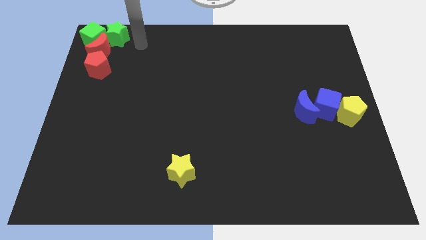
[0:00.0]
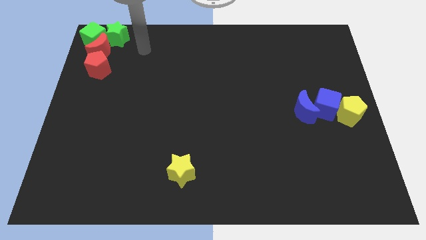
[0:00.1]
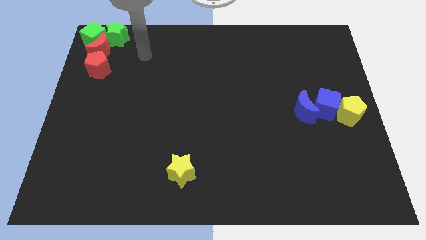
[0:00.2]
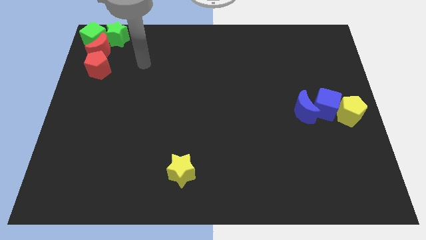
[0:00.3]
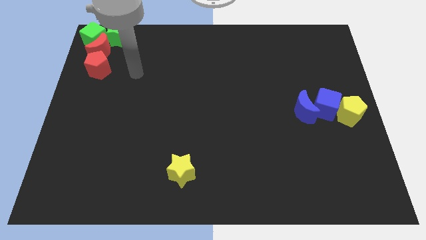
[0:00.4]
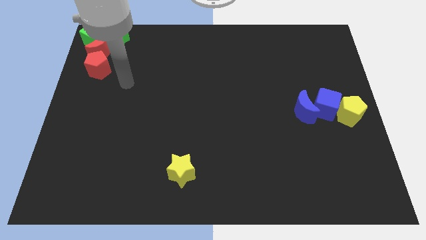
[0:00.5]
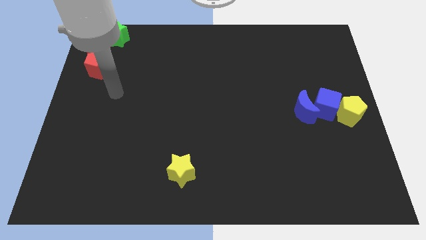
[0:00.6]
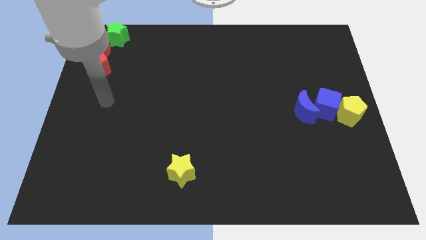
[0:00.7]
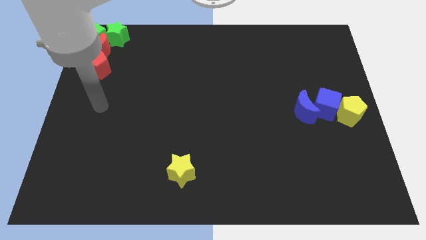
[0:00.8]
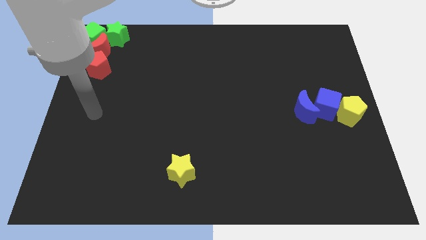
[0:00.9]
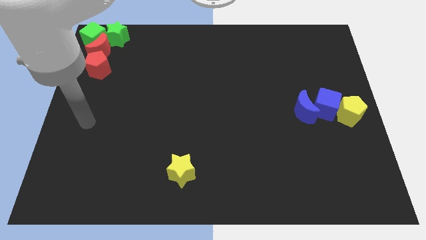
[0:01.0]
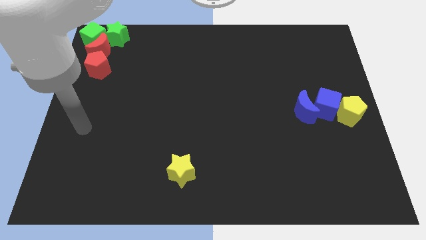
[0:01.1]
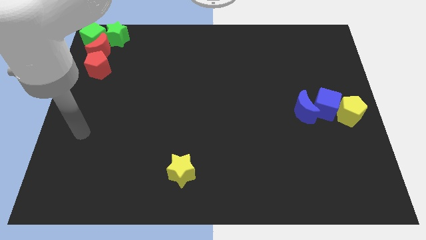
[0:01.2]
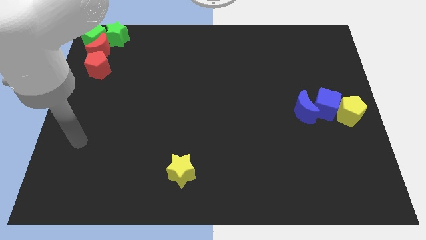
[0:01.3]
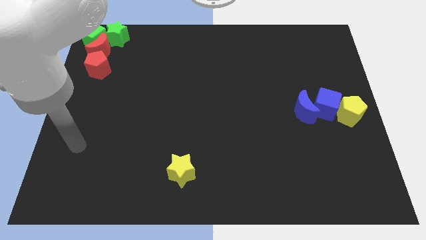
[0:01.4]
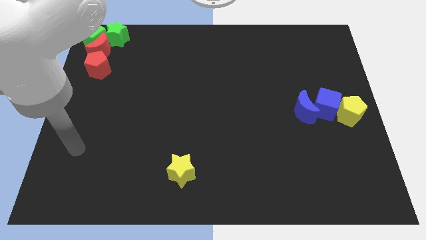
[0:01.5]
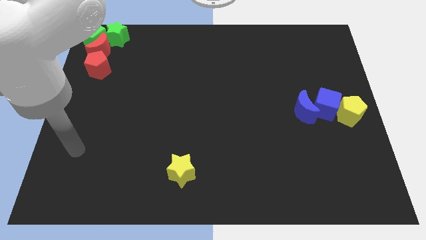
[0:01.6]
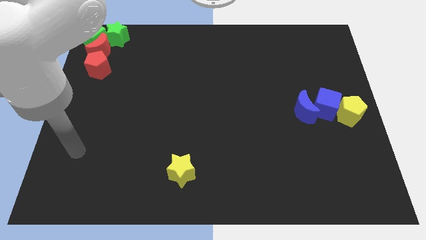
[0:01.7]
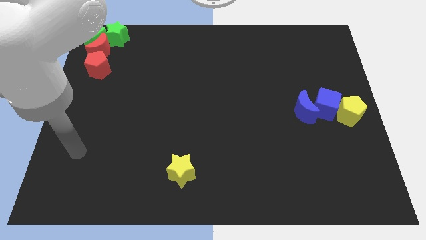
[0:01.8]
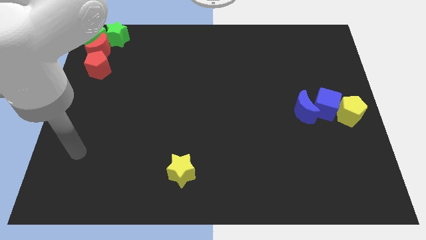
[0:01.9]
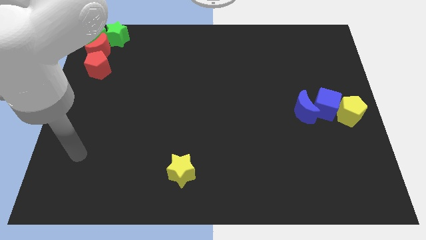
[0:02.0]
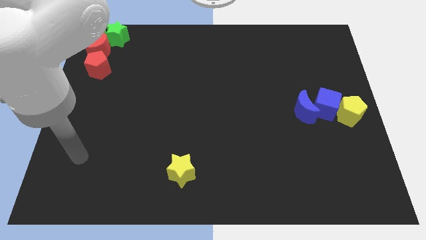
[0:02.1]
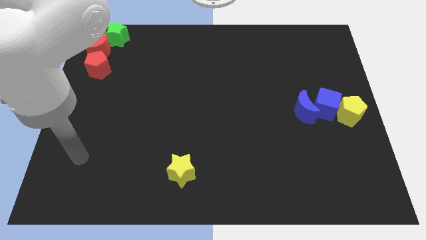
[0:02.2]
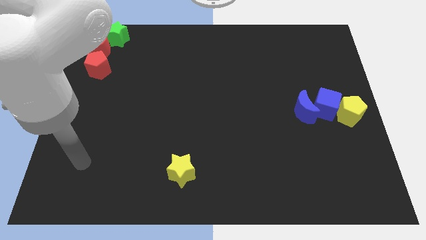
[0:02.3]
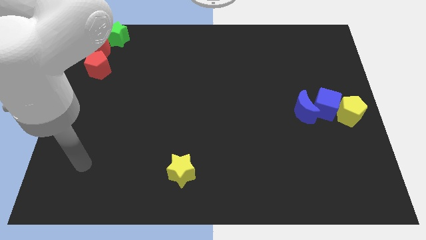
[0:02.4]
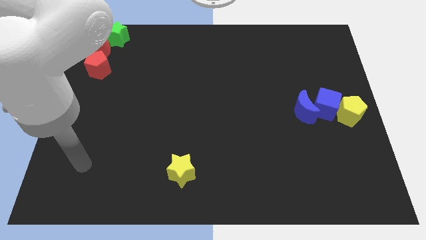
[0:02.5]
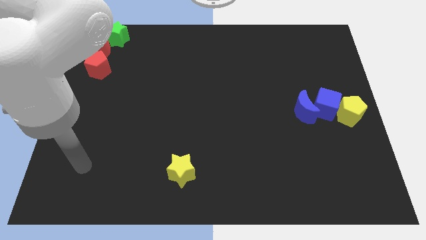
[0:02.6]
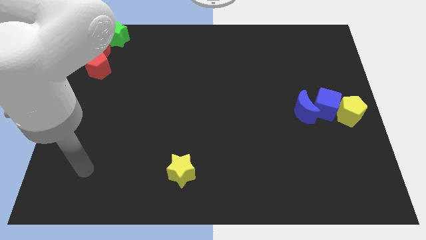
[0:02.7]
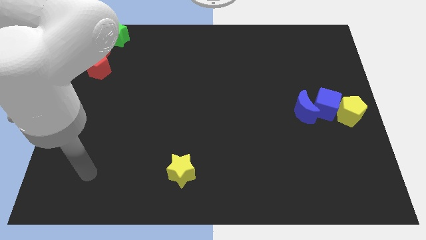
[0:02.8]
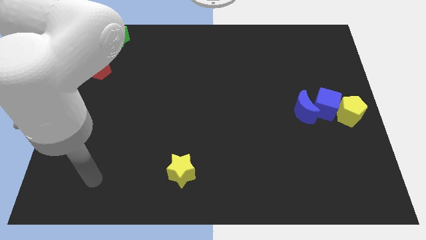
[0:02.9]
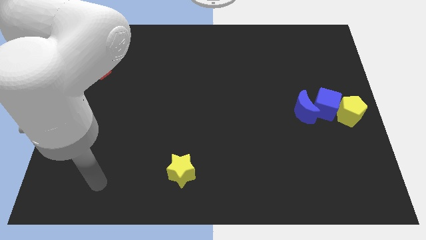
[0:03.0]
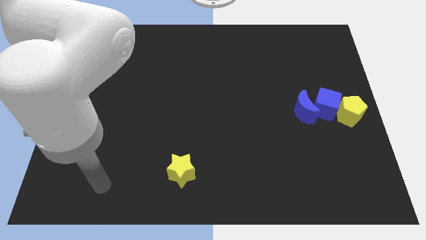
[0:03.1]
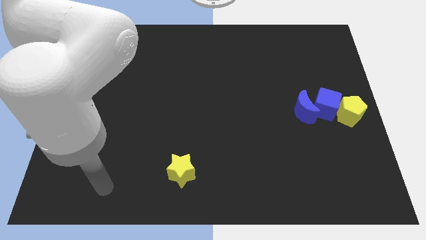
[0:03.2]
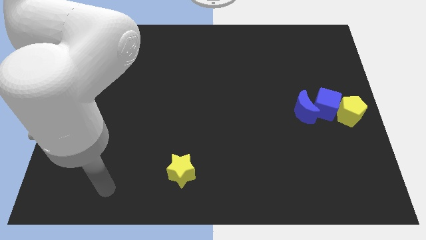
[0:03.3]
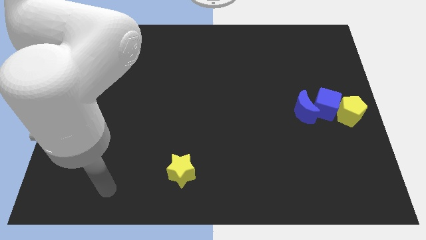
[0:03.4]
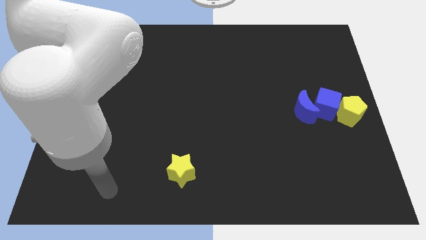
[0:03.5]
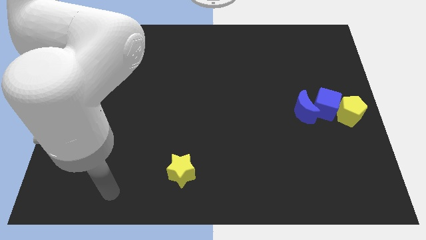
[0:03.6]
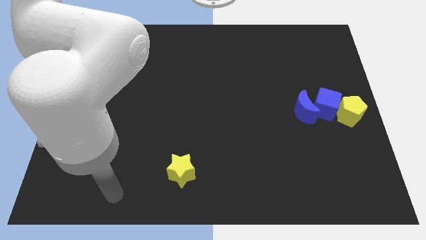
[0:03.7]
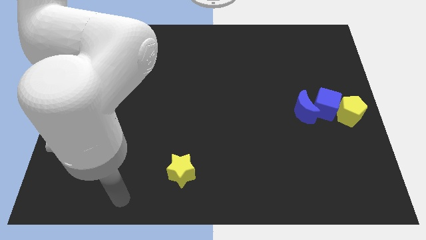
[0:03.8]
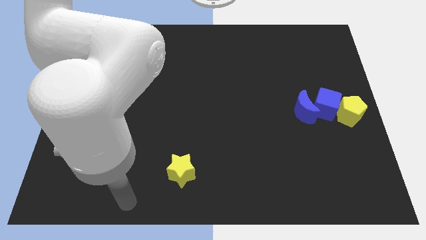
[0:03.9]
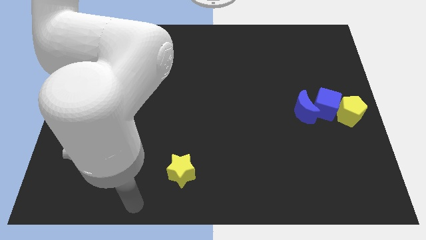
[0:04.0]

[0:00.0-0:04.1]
move your arm towards the bottom side of the board

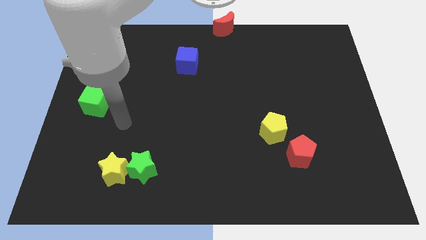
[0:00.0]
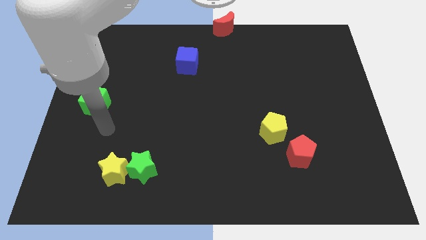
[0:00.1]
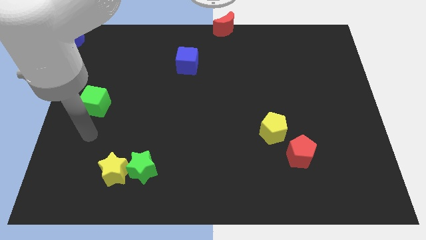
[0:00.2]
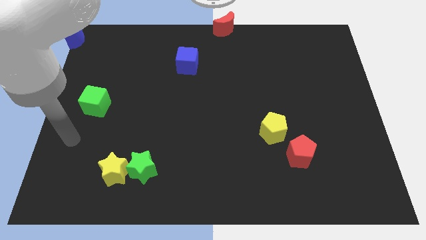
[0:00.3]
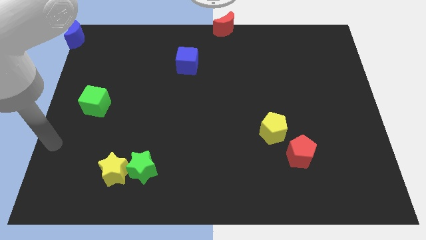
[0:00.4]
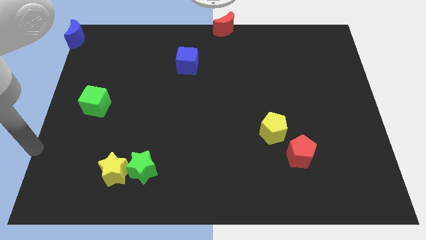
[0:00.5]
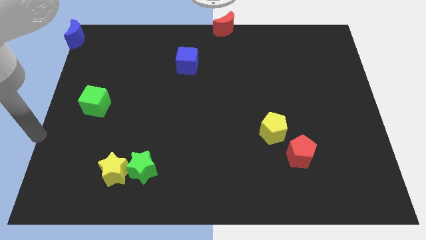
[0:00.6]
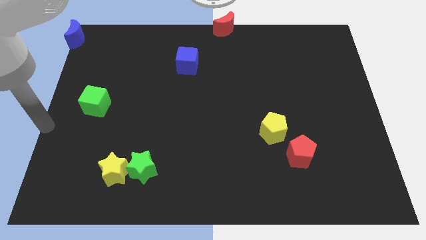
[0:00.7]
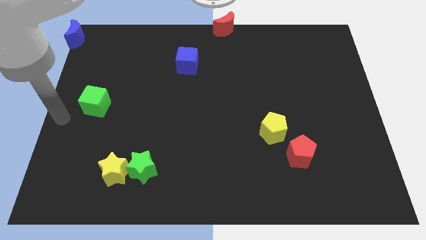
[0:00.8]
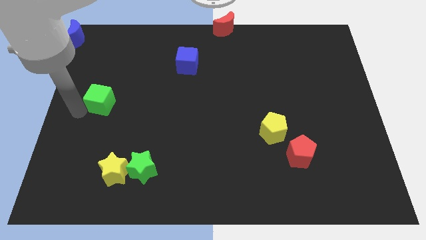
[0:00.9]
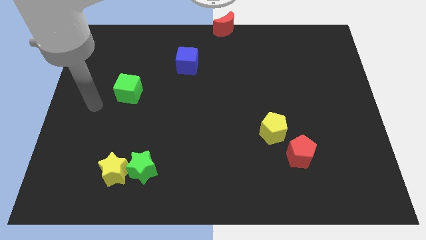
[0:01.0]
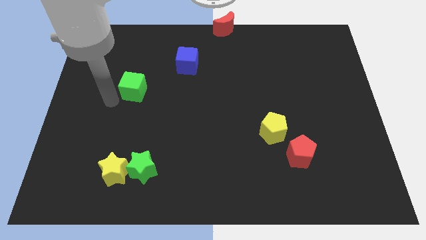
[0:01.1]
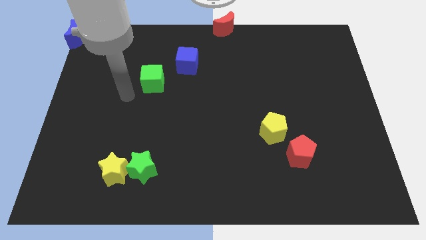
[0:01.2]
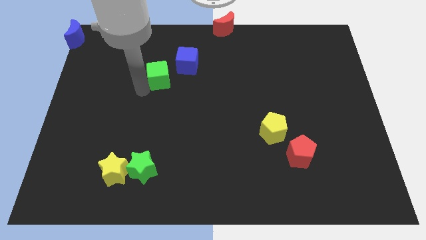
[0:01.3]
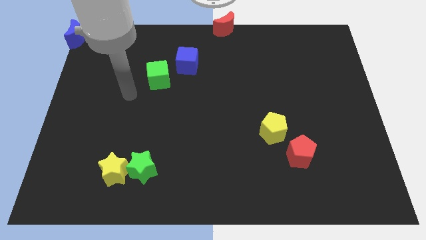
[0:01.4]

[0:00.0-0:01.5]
push the green cube towards the blue cube

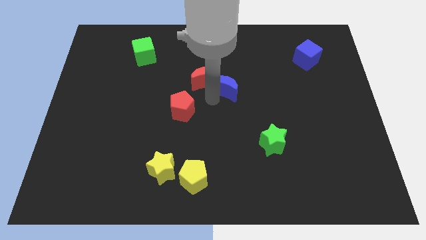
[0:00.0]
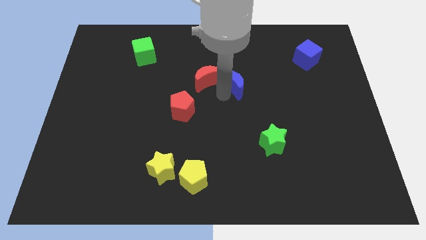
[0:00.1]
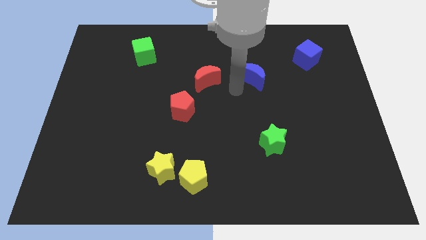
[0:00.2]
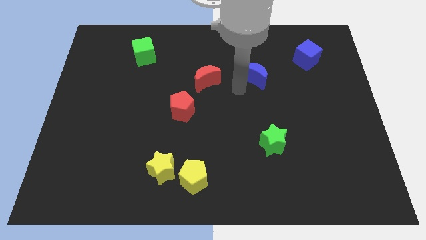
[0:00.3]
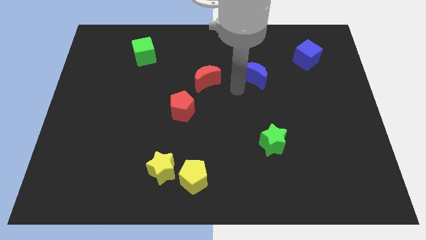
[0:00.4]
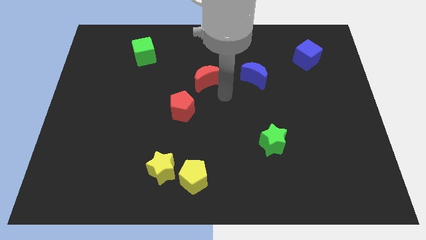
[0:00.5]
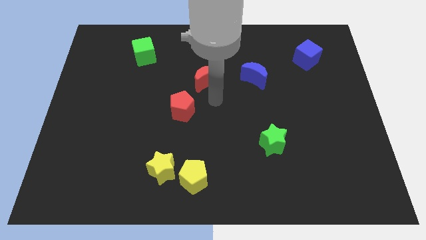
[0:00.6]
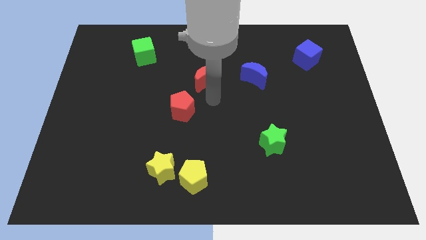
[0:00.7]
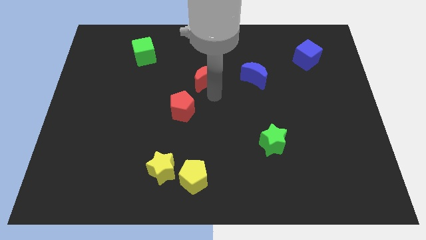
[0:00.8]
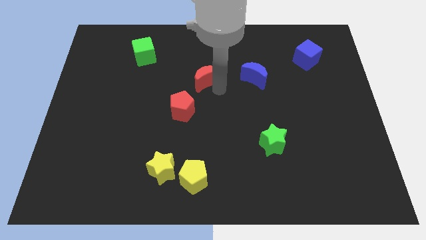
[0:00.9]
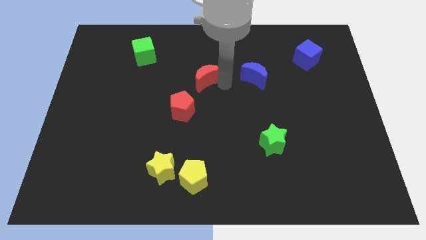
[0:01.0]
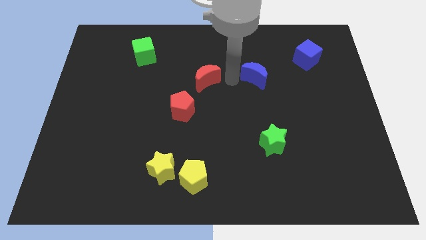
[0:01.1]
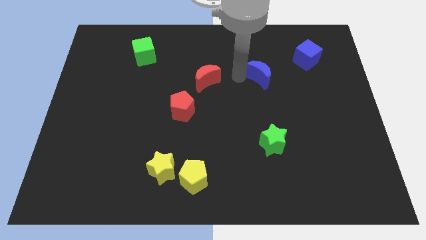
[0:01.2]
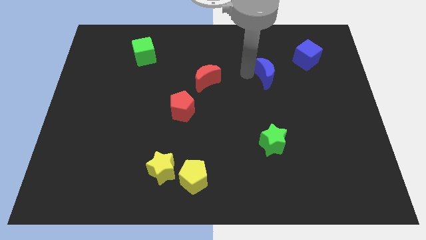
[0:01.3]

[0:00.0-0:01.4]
separate the blue crescent away from the red crescent

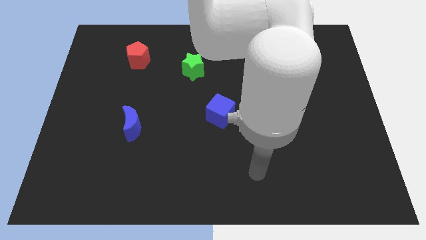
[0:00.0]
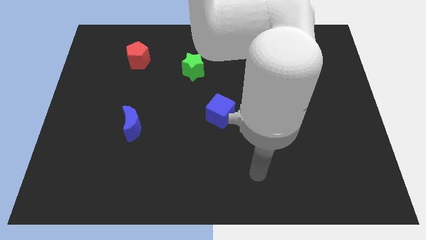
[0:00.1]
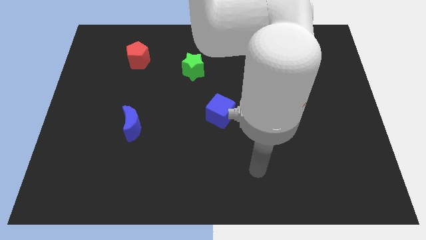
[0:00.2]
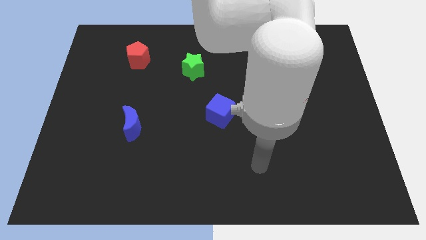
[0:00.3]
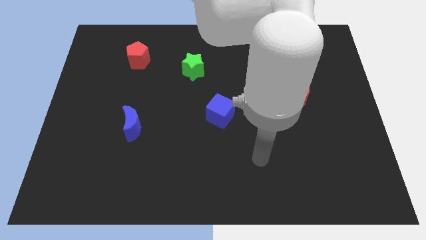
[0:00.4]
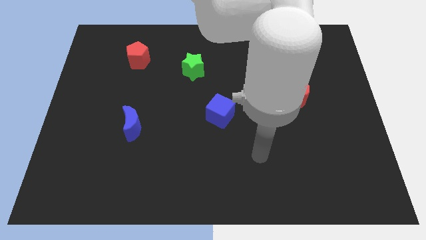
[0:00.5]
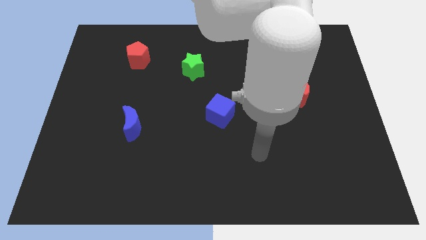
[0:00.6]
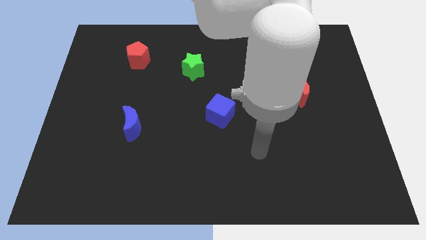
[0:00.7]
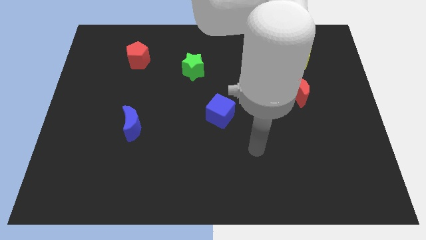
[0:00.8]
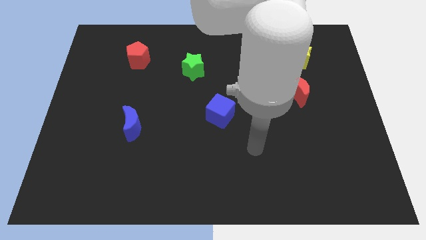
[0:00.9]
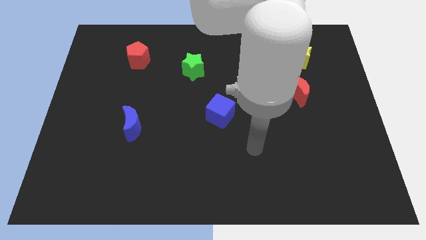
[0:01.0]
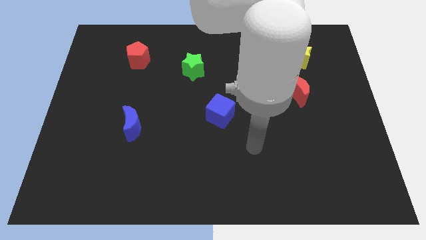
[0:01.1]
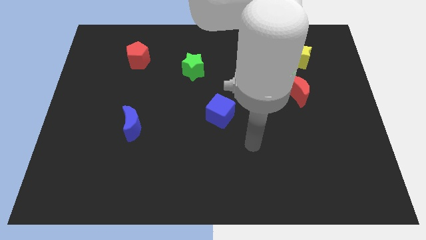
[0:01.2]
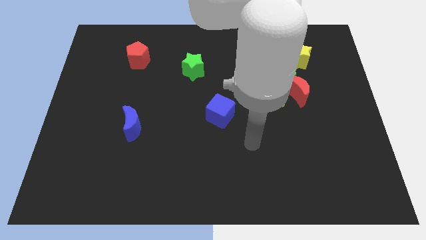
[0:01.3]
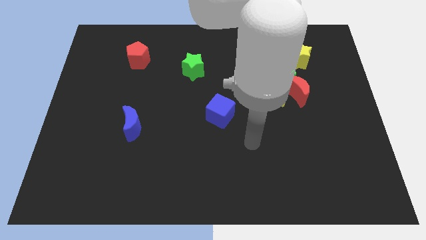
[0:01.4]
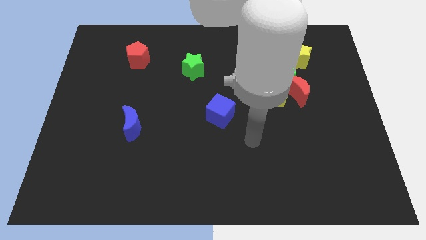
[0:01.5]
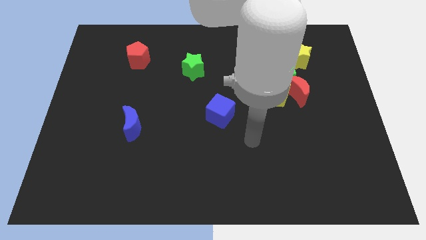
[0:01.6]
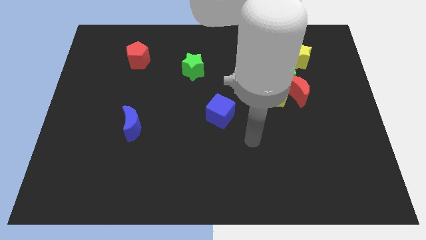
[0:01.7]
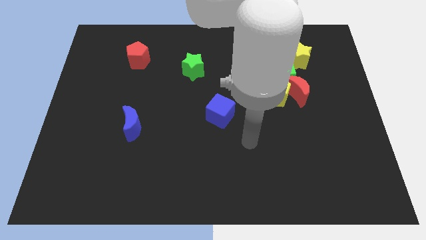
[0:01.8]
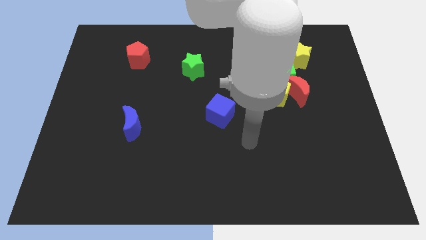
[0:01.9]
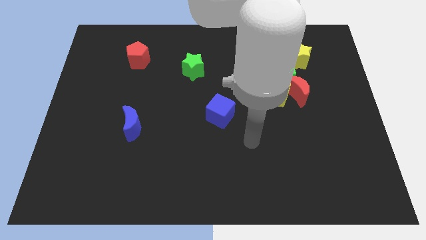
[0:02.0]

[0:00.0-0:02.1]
move your arm to the right side of the blue cubeb
